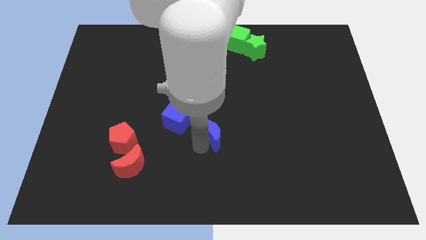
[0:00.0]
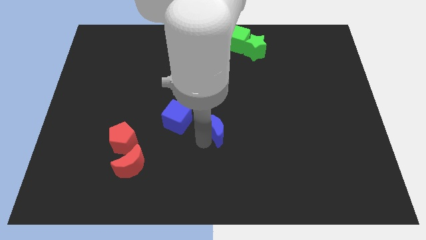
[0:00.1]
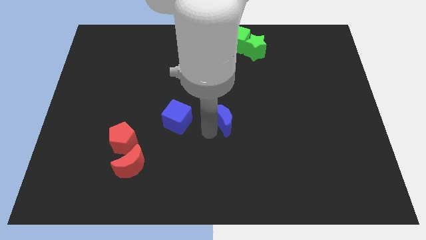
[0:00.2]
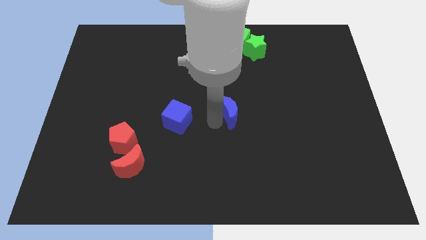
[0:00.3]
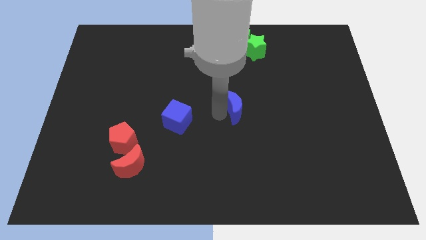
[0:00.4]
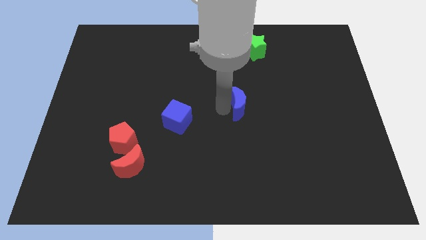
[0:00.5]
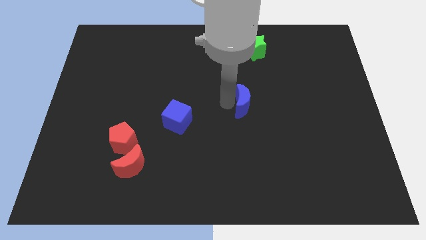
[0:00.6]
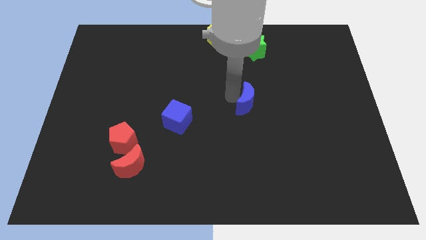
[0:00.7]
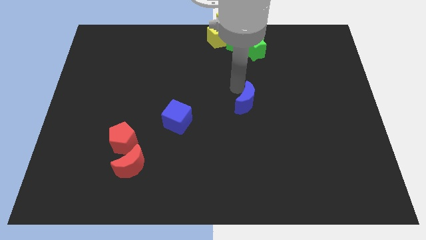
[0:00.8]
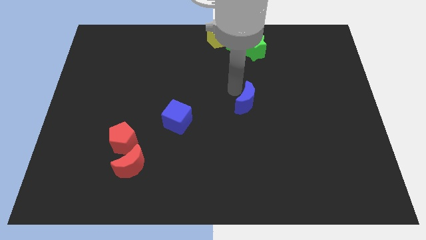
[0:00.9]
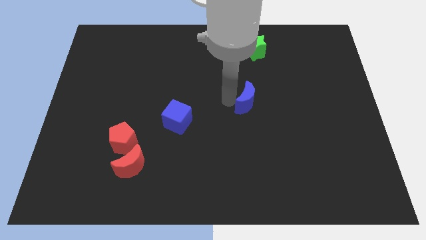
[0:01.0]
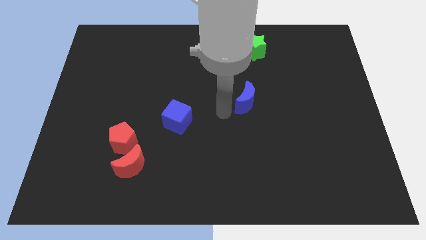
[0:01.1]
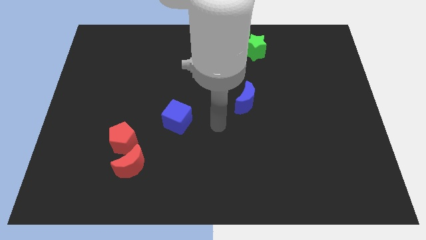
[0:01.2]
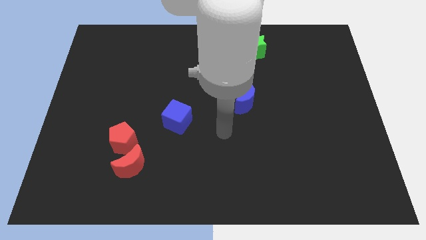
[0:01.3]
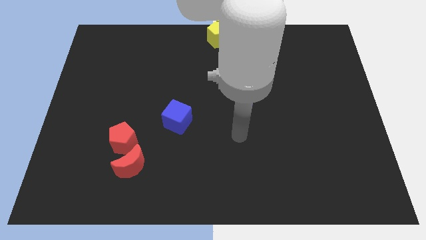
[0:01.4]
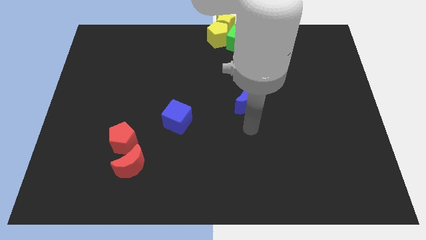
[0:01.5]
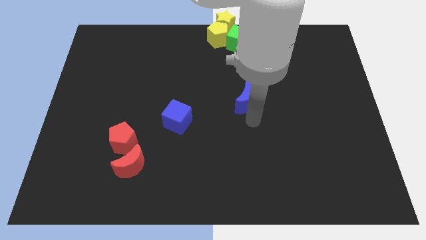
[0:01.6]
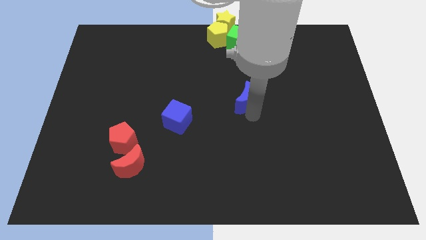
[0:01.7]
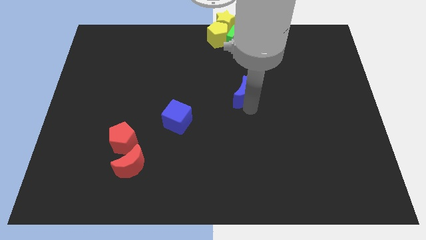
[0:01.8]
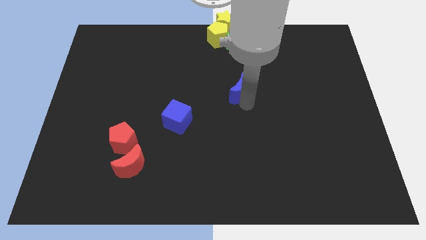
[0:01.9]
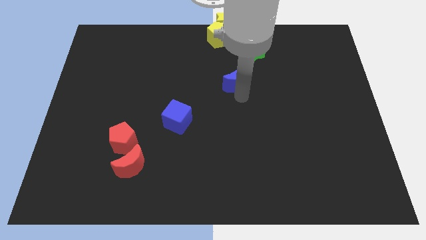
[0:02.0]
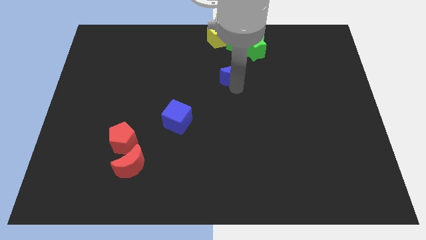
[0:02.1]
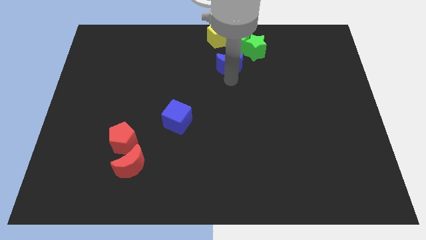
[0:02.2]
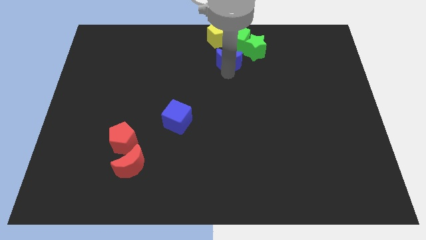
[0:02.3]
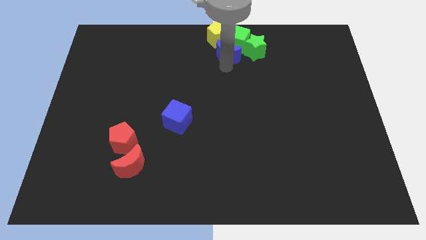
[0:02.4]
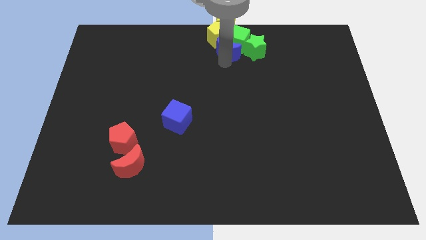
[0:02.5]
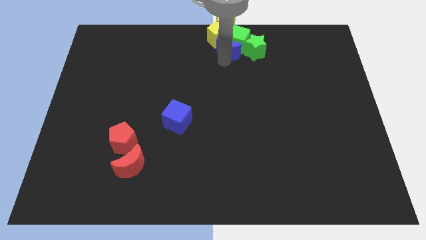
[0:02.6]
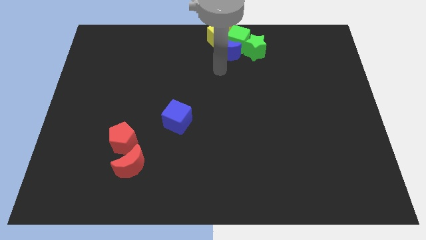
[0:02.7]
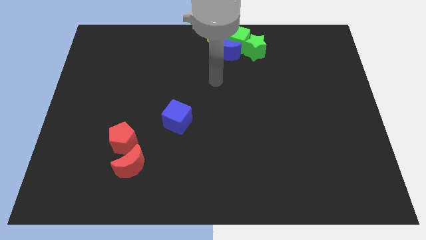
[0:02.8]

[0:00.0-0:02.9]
push the blue moon into the green cube

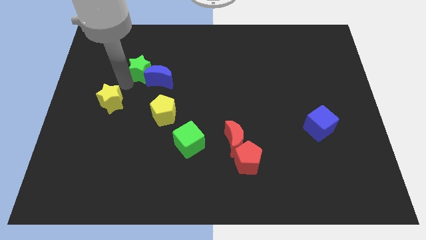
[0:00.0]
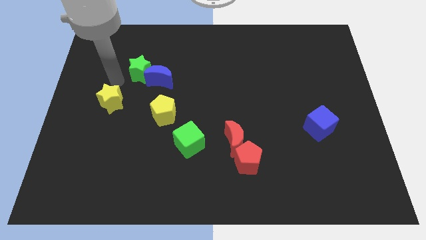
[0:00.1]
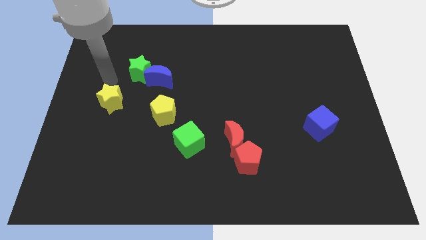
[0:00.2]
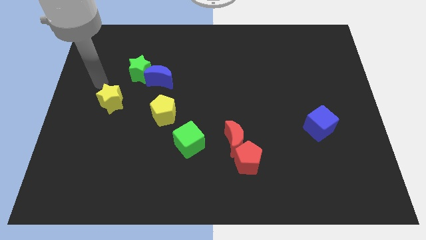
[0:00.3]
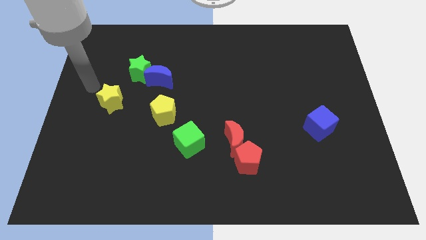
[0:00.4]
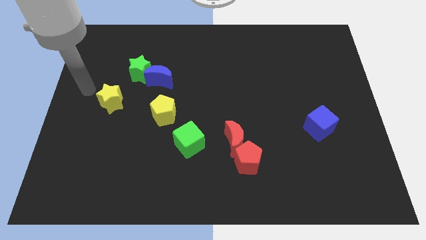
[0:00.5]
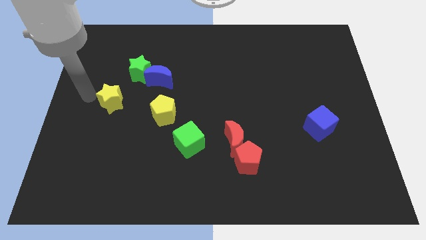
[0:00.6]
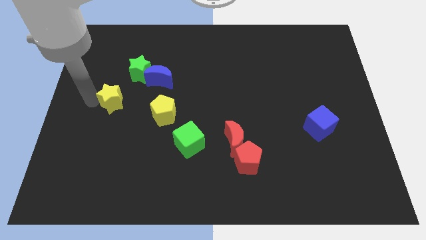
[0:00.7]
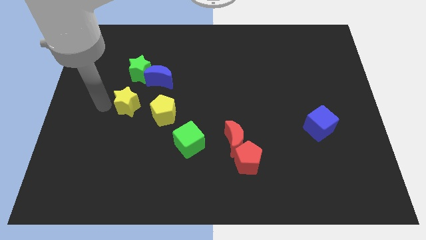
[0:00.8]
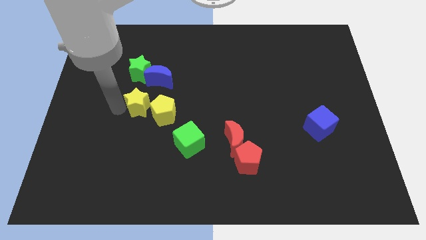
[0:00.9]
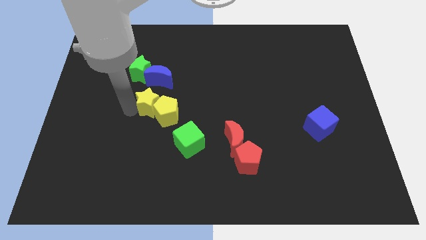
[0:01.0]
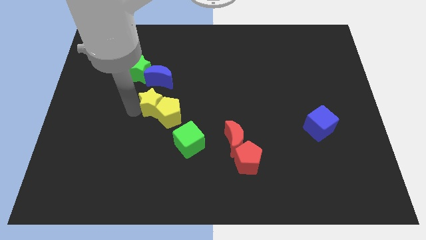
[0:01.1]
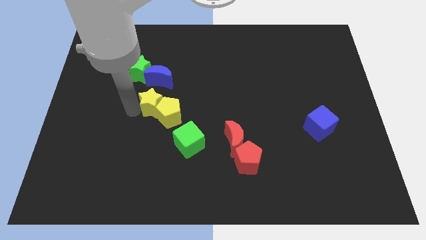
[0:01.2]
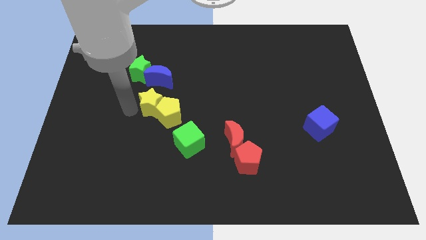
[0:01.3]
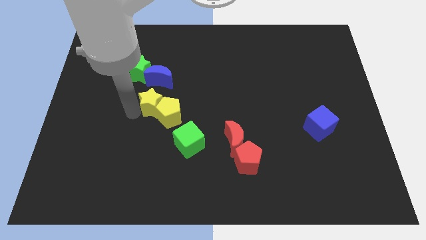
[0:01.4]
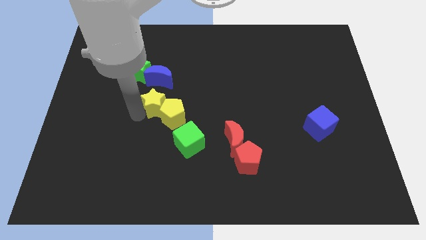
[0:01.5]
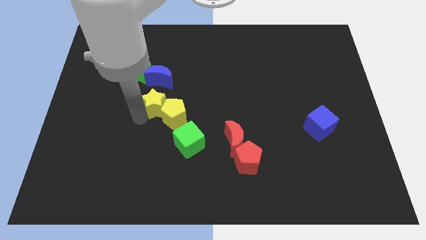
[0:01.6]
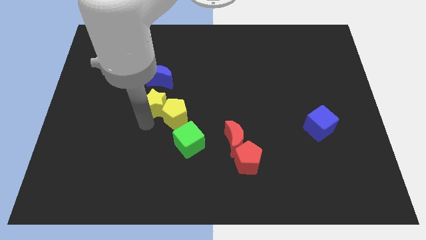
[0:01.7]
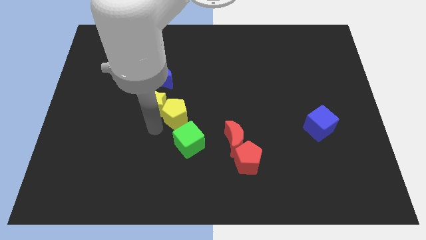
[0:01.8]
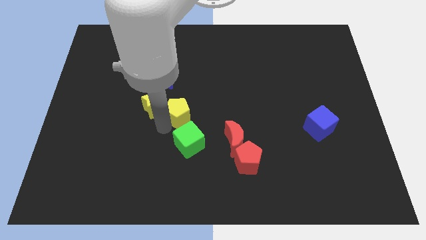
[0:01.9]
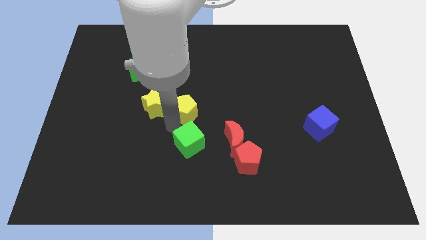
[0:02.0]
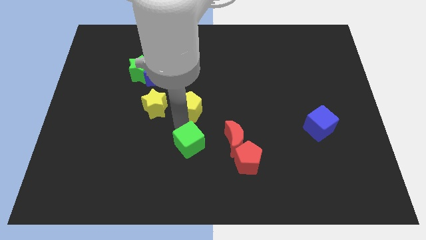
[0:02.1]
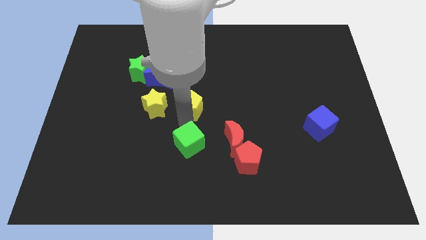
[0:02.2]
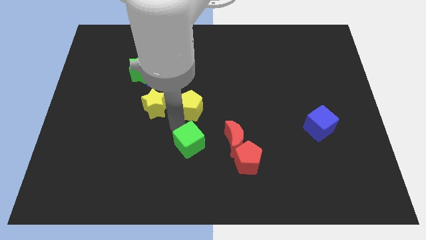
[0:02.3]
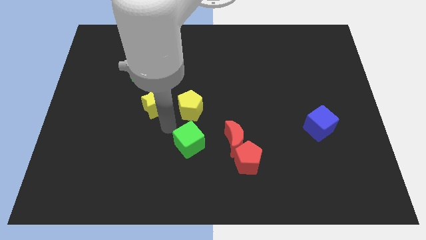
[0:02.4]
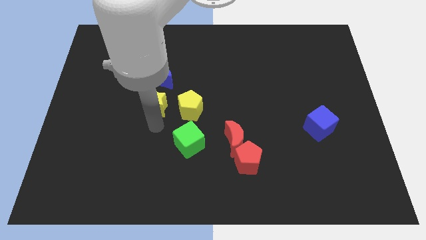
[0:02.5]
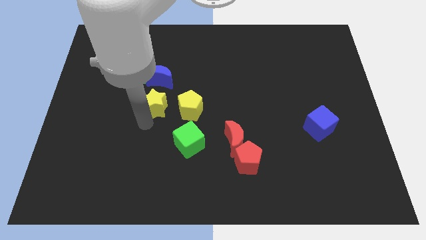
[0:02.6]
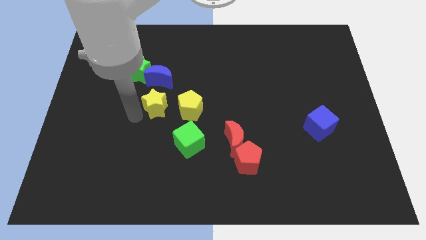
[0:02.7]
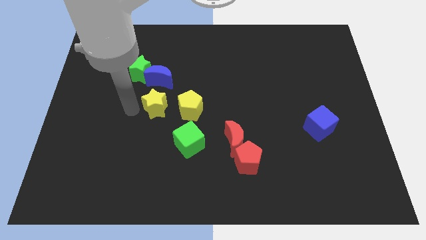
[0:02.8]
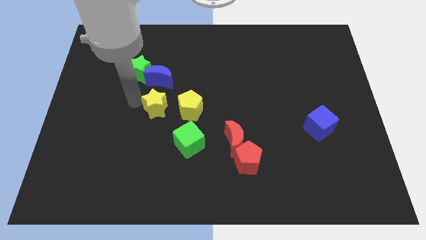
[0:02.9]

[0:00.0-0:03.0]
place the yellow star left to the yellow pentagon

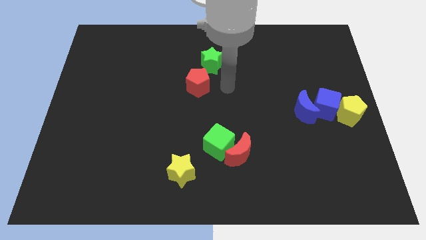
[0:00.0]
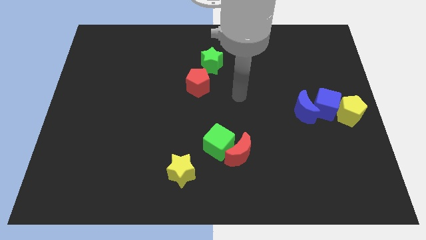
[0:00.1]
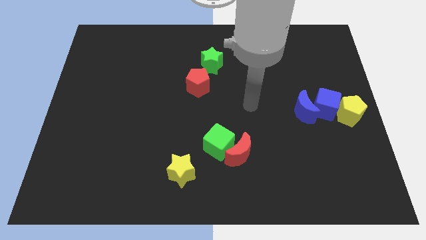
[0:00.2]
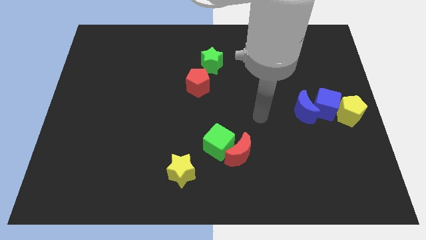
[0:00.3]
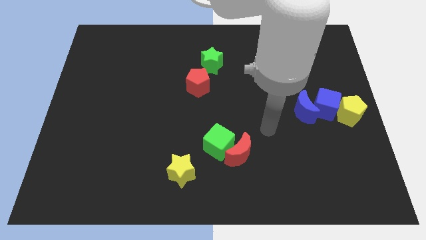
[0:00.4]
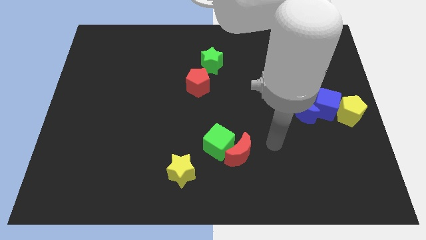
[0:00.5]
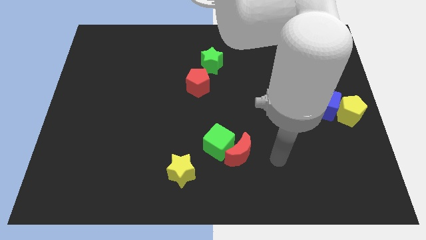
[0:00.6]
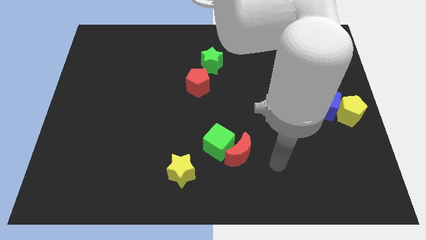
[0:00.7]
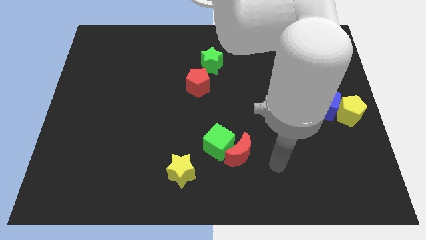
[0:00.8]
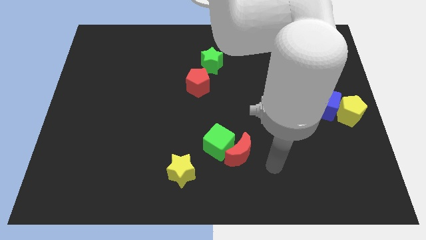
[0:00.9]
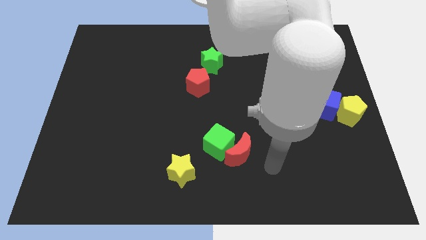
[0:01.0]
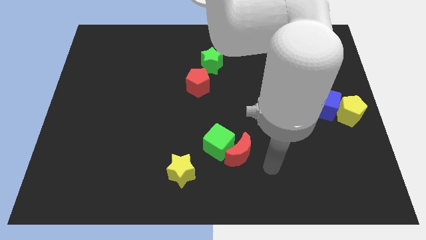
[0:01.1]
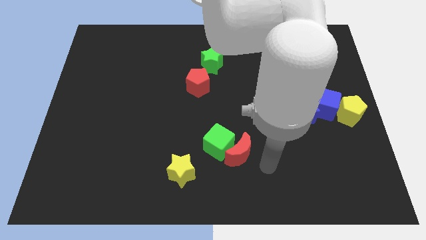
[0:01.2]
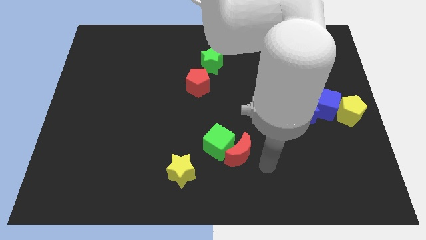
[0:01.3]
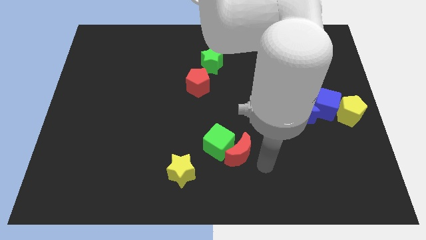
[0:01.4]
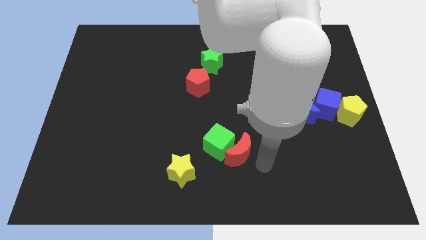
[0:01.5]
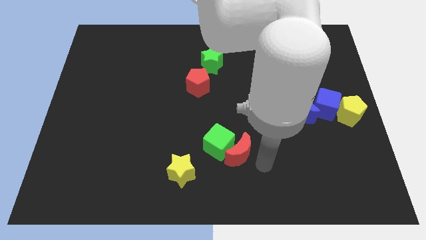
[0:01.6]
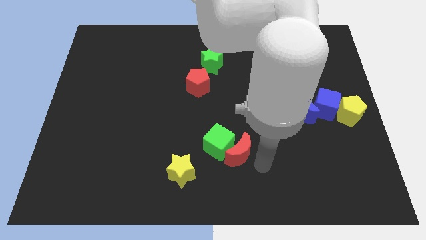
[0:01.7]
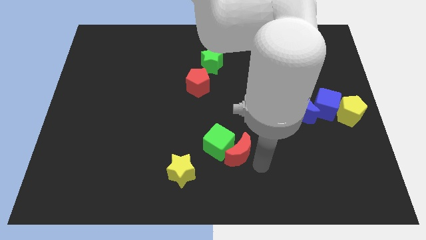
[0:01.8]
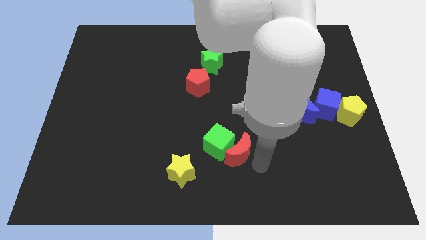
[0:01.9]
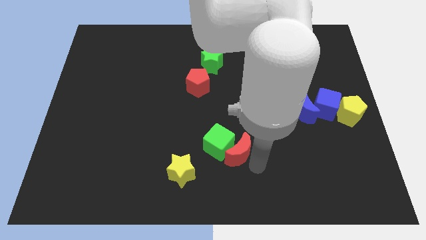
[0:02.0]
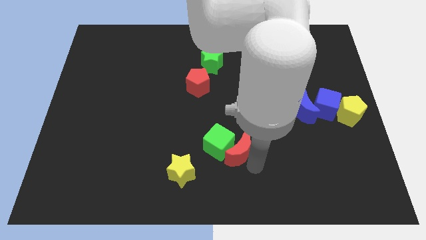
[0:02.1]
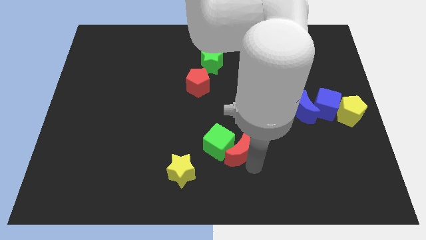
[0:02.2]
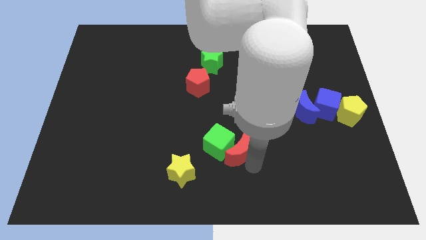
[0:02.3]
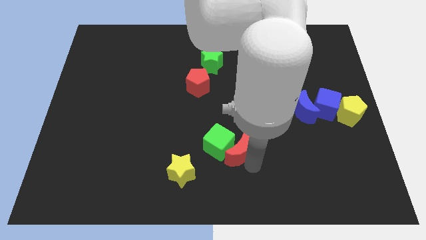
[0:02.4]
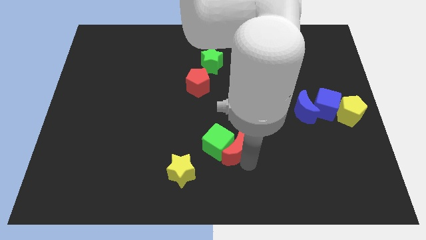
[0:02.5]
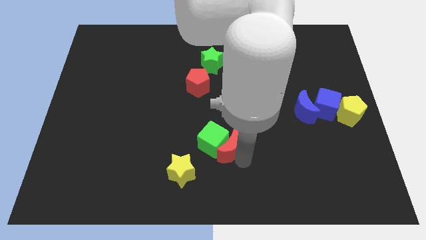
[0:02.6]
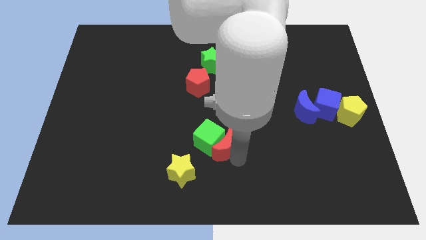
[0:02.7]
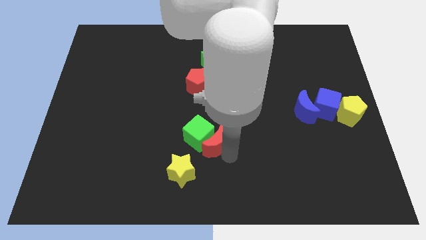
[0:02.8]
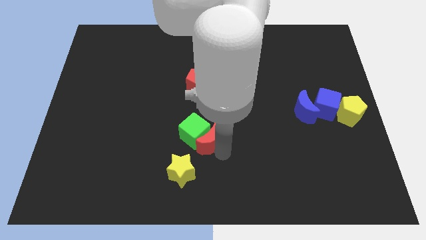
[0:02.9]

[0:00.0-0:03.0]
push the red crescent and green cube towards the left side of the board

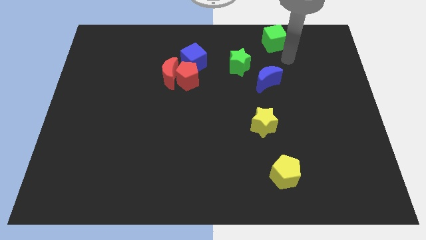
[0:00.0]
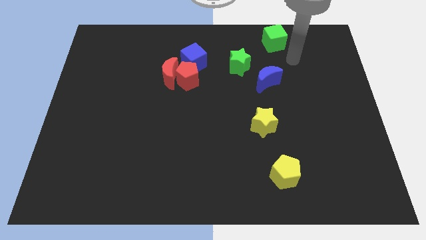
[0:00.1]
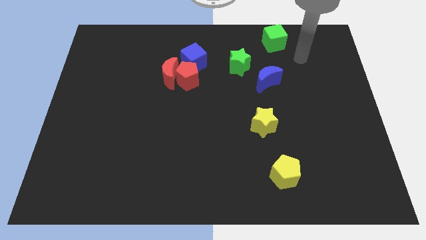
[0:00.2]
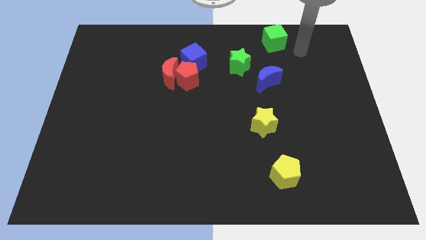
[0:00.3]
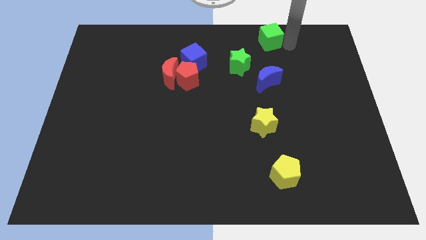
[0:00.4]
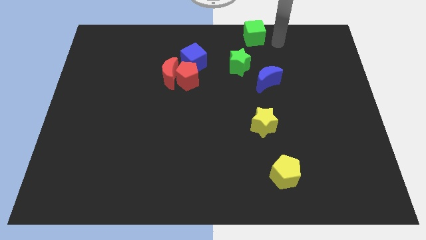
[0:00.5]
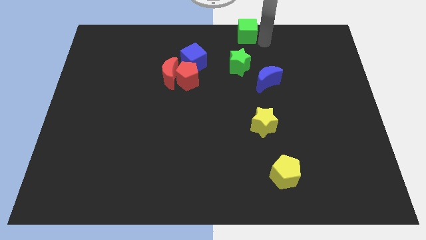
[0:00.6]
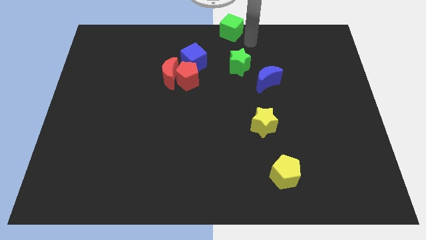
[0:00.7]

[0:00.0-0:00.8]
move the green cube above the green star
